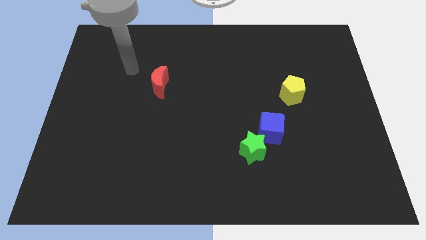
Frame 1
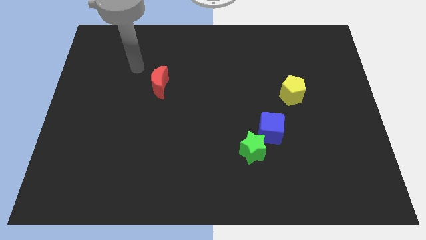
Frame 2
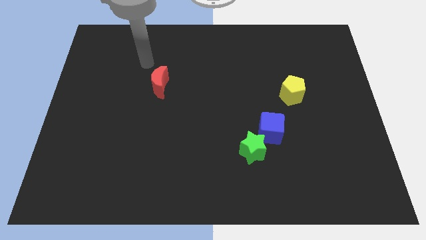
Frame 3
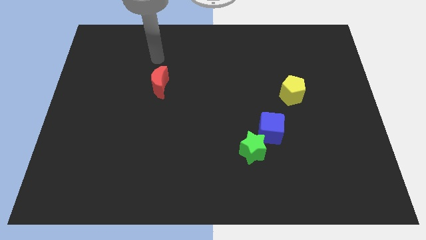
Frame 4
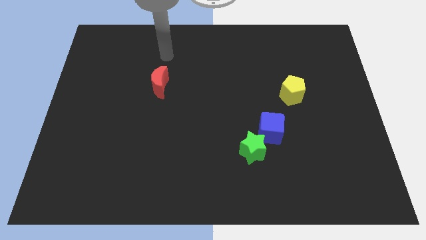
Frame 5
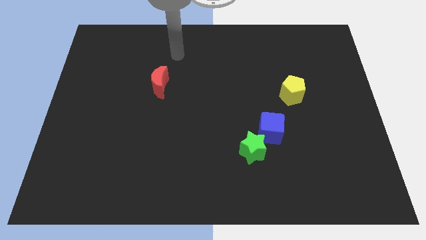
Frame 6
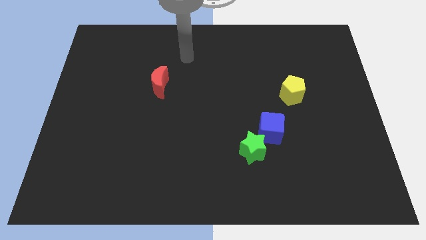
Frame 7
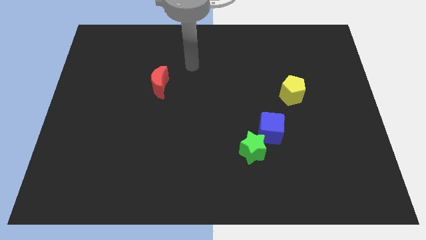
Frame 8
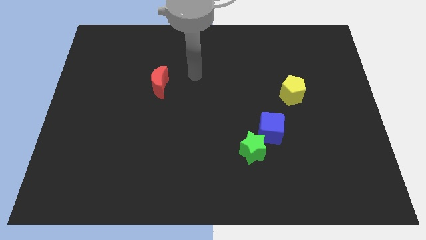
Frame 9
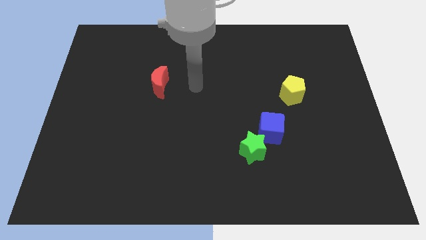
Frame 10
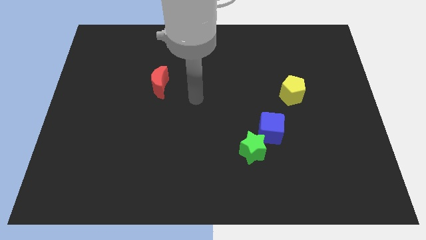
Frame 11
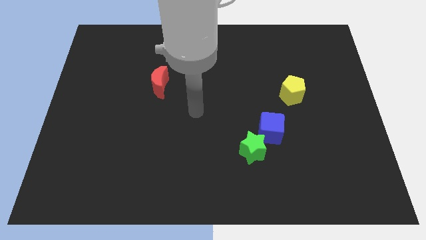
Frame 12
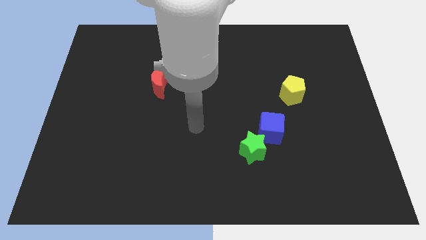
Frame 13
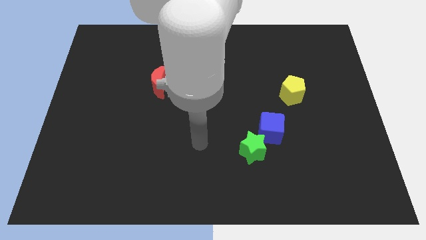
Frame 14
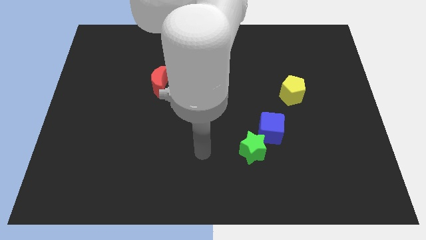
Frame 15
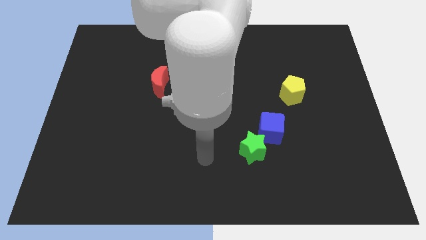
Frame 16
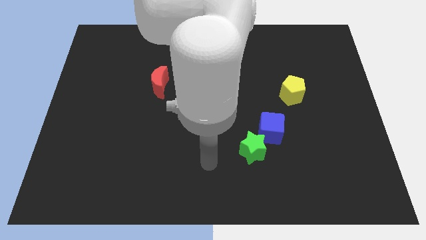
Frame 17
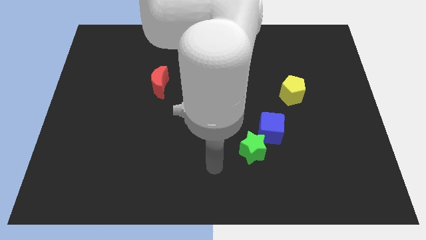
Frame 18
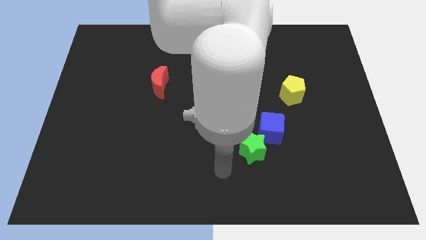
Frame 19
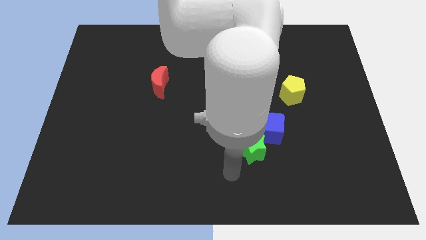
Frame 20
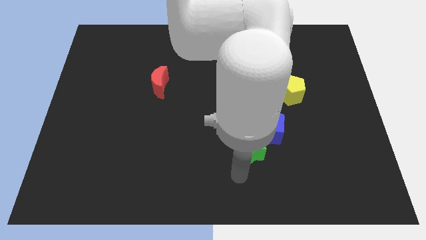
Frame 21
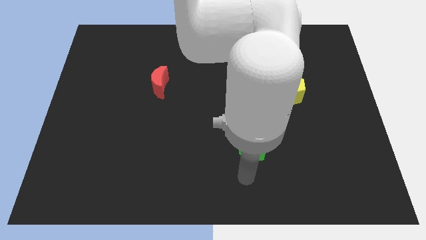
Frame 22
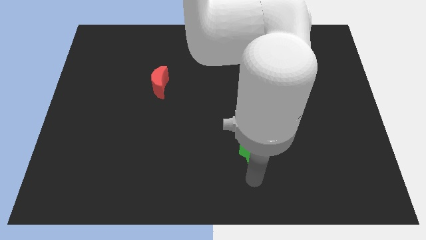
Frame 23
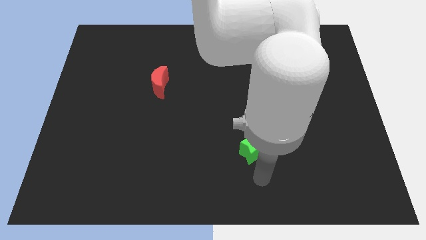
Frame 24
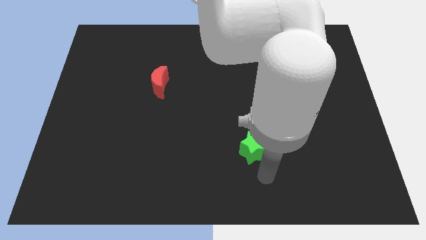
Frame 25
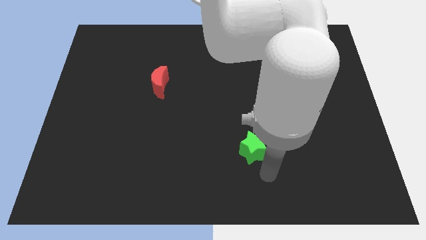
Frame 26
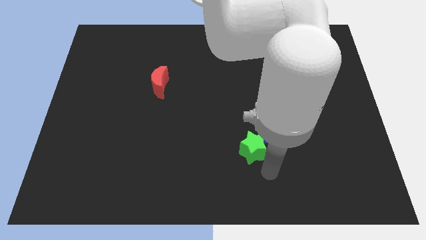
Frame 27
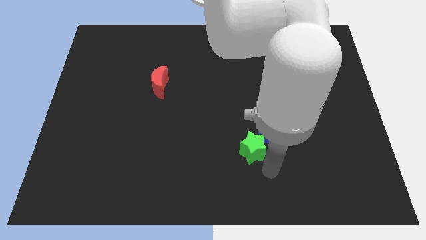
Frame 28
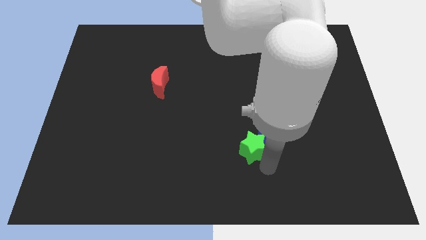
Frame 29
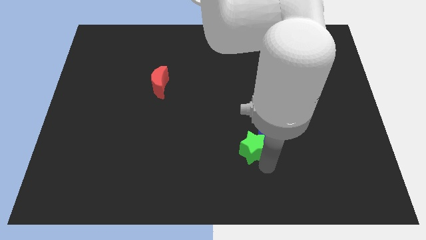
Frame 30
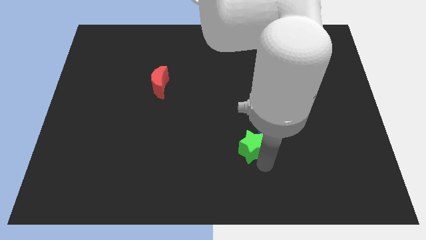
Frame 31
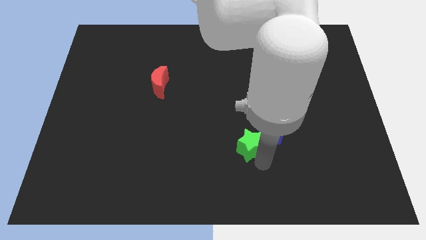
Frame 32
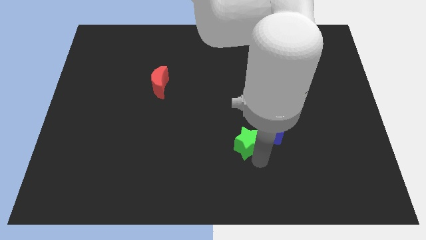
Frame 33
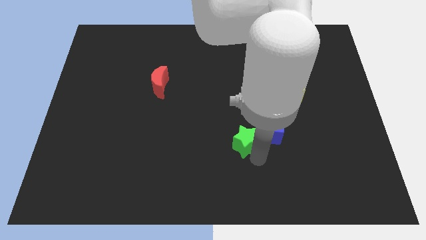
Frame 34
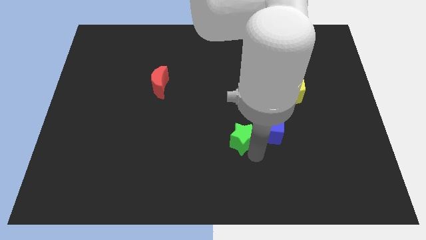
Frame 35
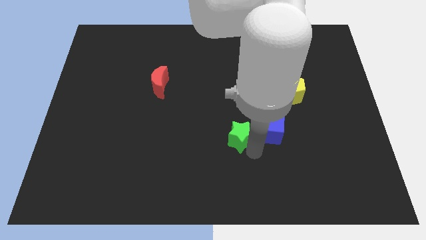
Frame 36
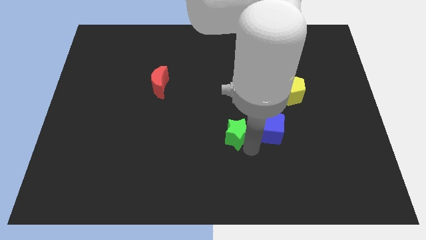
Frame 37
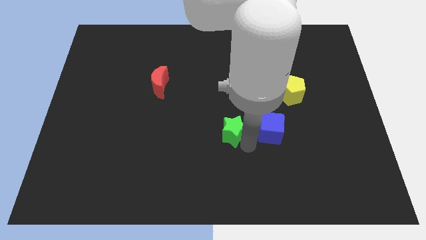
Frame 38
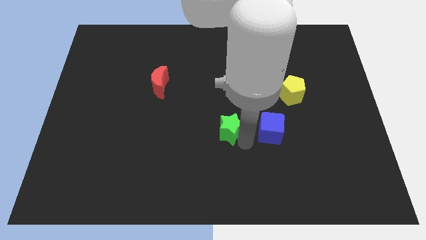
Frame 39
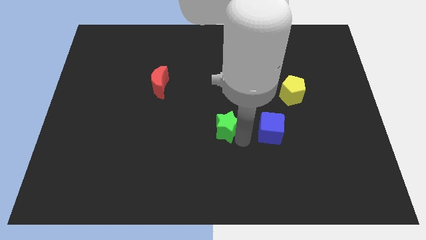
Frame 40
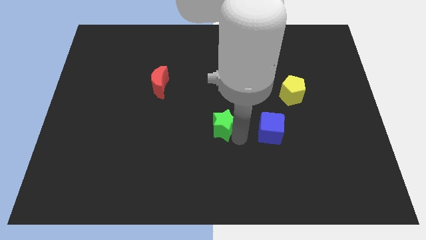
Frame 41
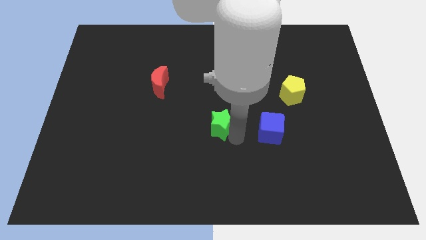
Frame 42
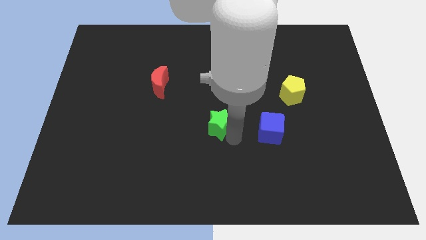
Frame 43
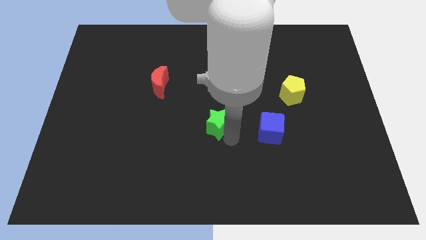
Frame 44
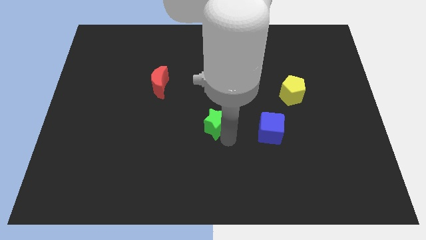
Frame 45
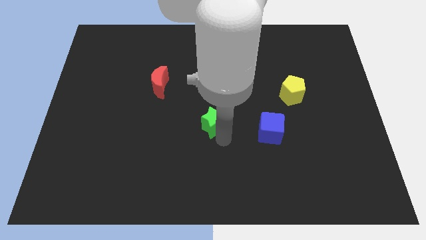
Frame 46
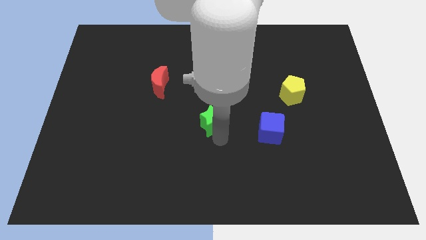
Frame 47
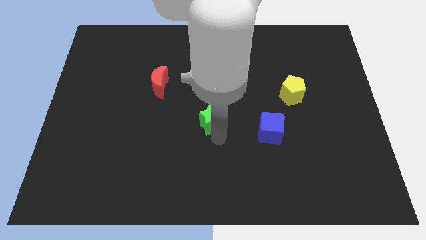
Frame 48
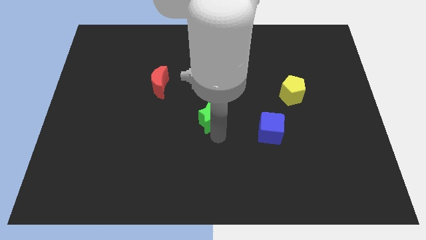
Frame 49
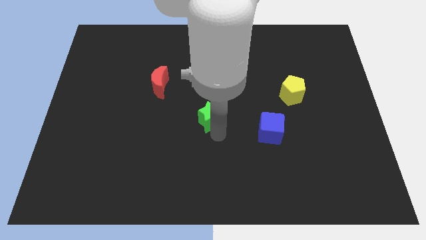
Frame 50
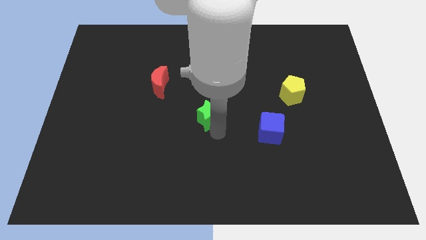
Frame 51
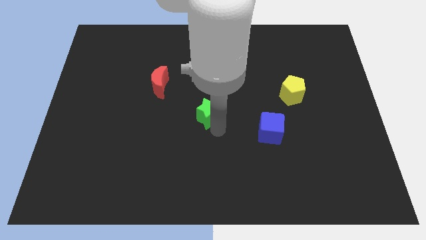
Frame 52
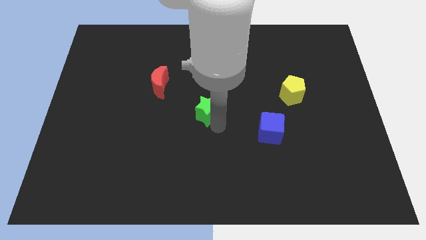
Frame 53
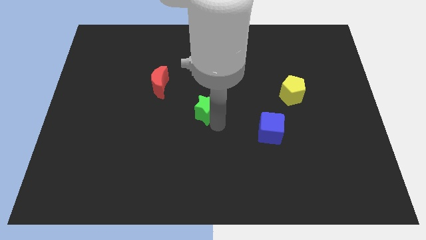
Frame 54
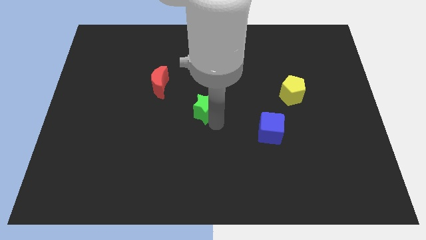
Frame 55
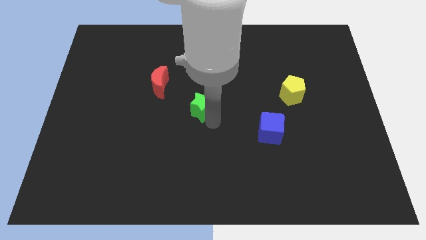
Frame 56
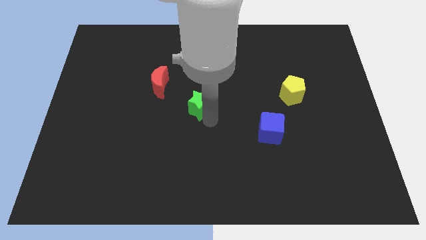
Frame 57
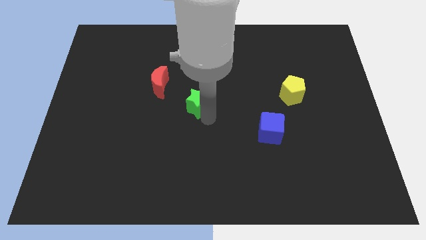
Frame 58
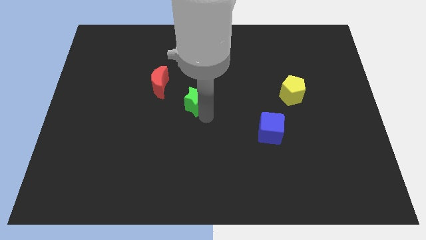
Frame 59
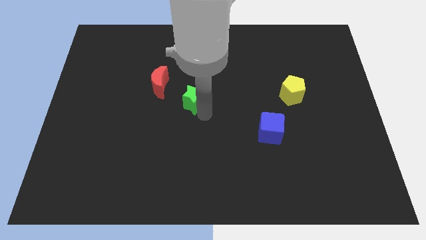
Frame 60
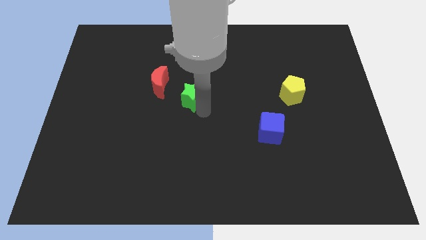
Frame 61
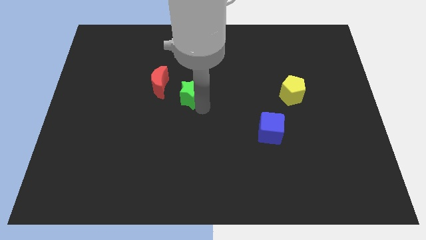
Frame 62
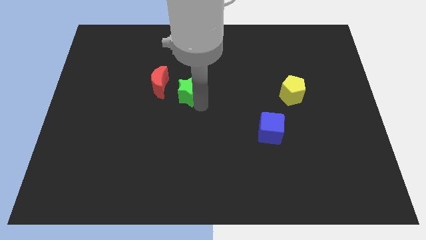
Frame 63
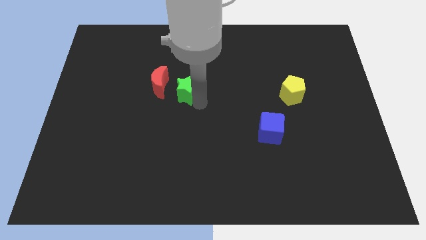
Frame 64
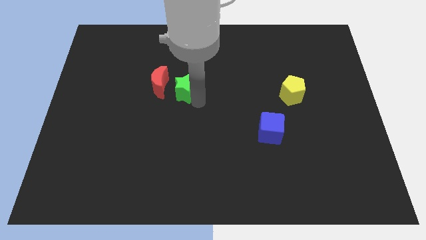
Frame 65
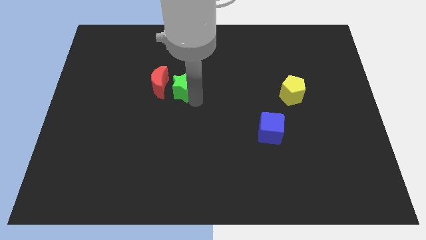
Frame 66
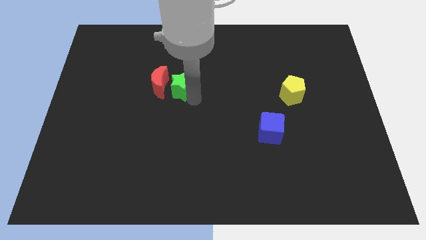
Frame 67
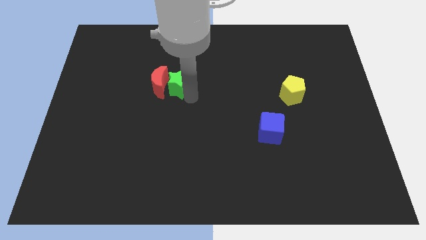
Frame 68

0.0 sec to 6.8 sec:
move the green block next to the moon

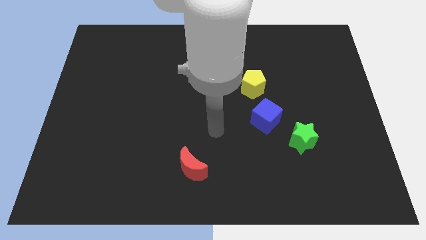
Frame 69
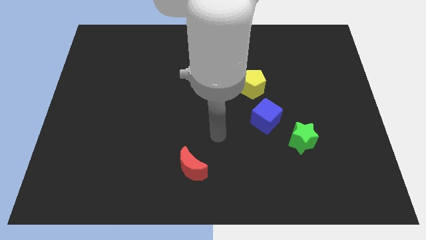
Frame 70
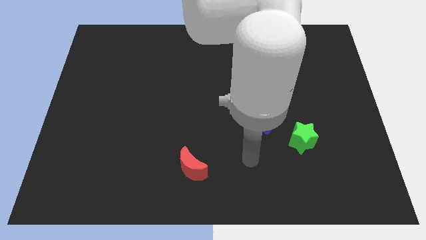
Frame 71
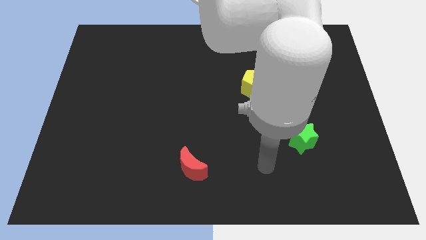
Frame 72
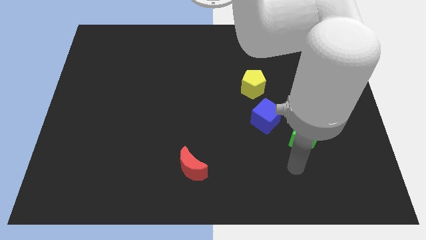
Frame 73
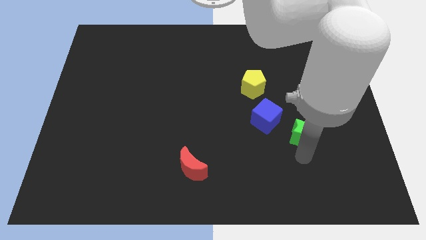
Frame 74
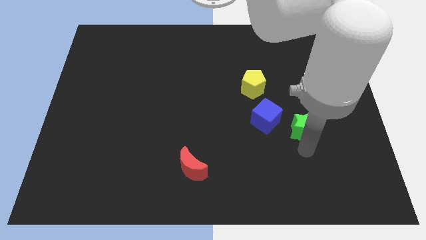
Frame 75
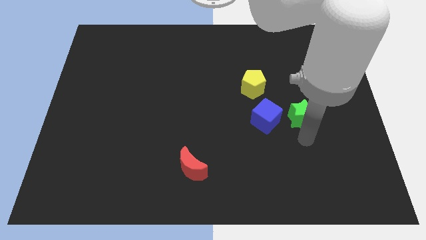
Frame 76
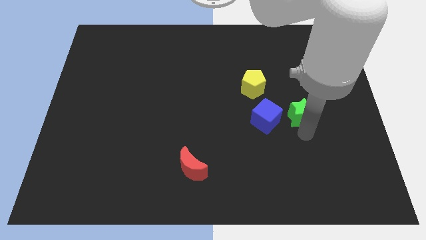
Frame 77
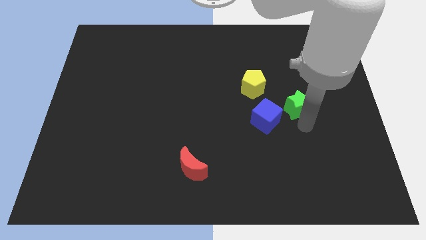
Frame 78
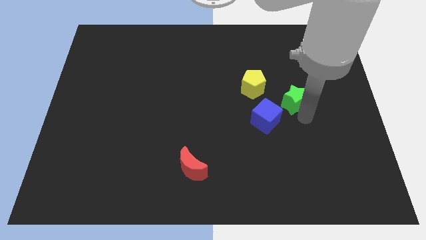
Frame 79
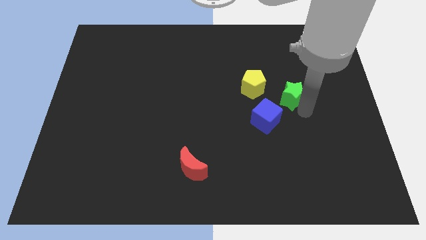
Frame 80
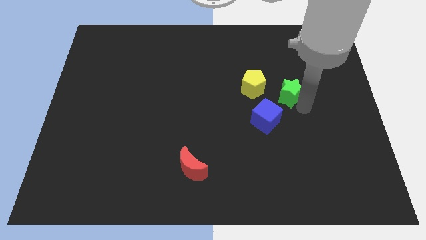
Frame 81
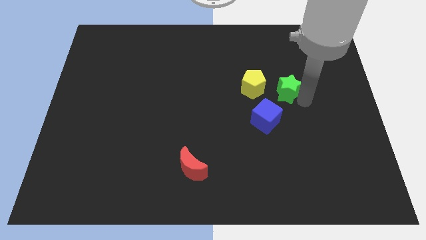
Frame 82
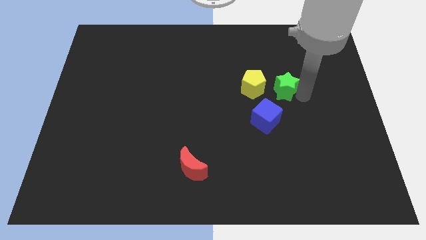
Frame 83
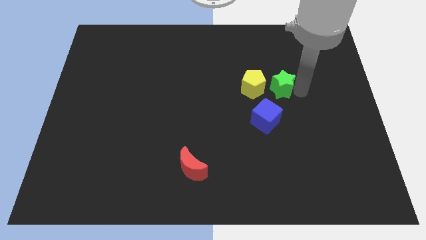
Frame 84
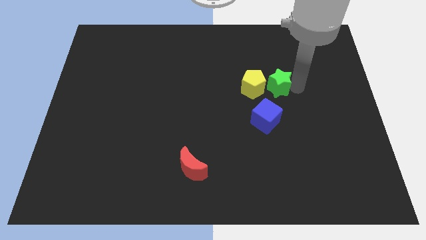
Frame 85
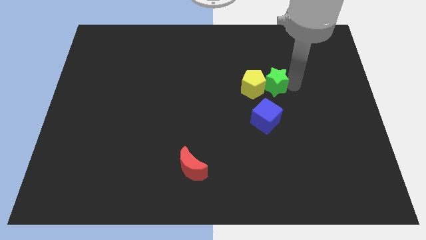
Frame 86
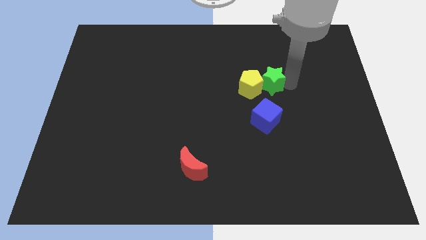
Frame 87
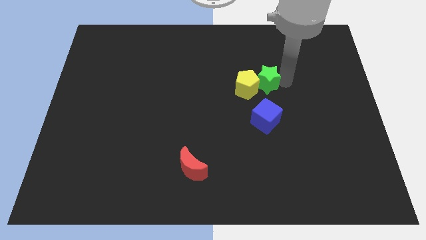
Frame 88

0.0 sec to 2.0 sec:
put the green block to the yellow pentagon
